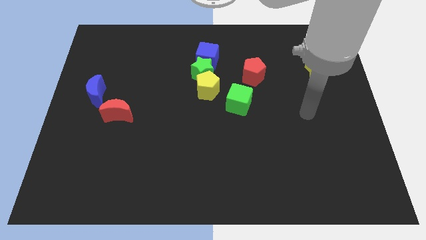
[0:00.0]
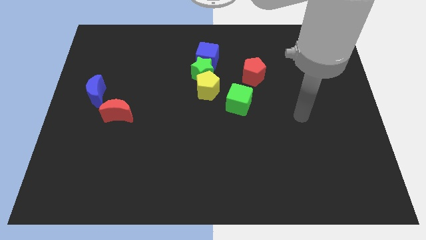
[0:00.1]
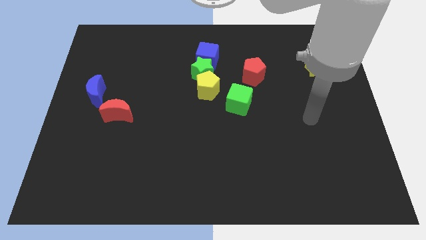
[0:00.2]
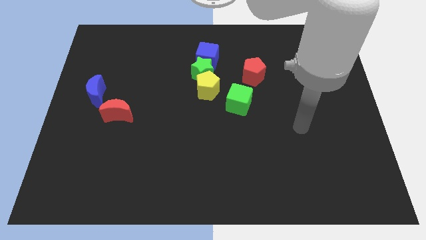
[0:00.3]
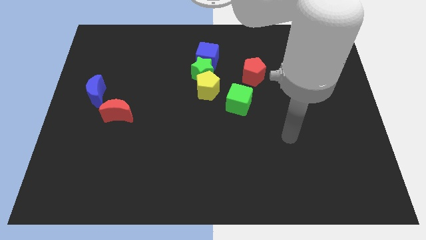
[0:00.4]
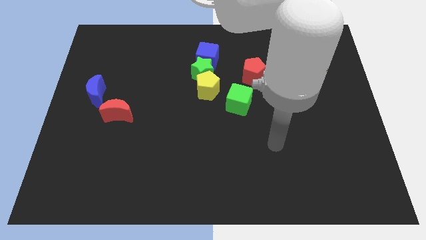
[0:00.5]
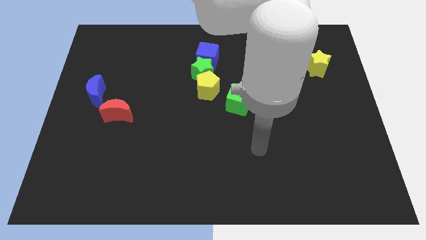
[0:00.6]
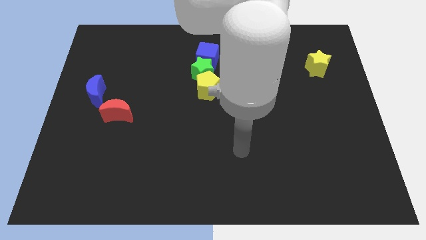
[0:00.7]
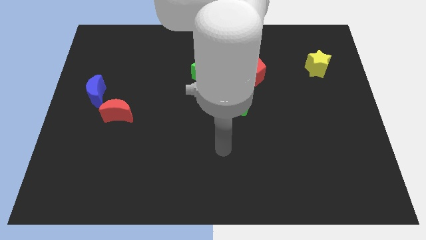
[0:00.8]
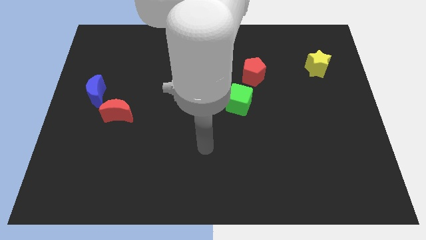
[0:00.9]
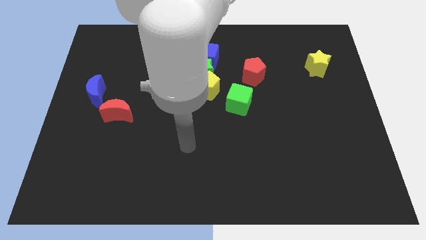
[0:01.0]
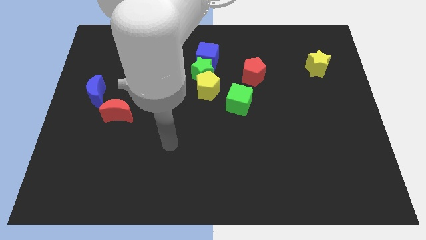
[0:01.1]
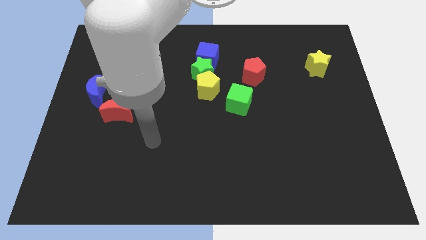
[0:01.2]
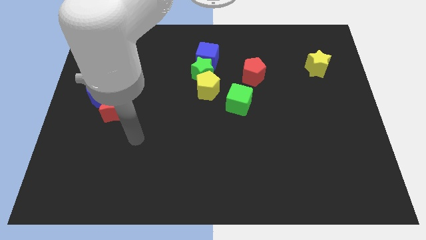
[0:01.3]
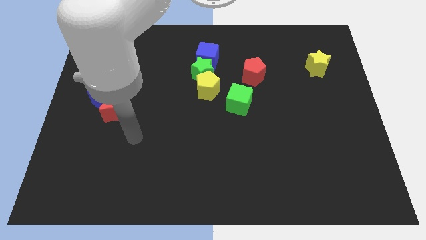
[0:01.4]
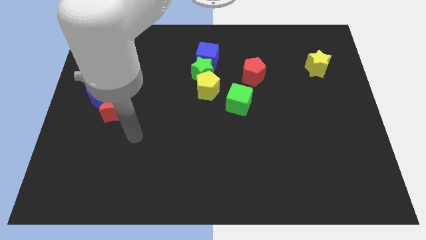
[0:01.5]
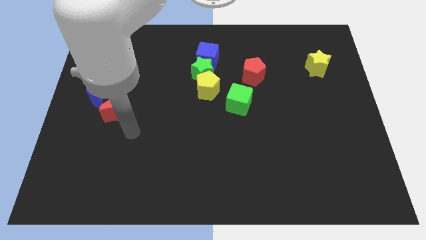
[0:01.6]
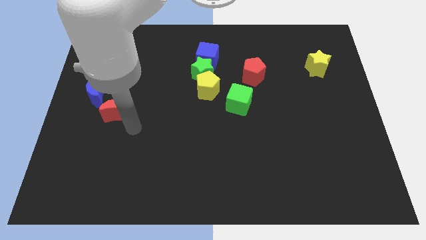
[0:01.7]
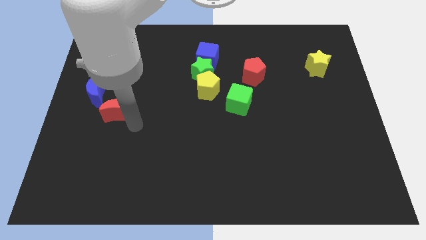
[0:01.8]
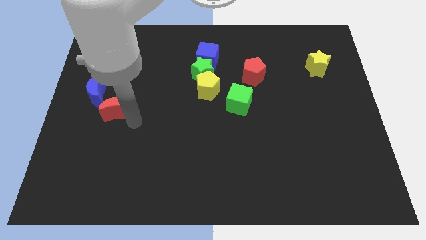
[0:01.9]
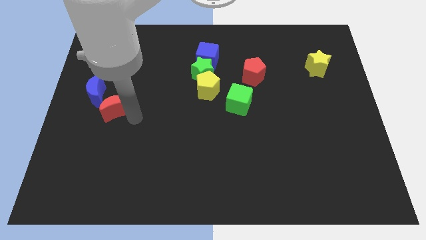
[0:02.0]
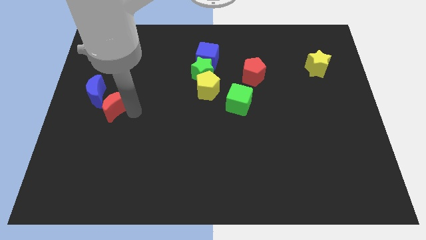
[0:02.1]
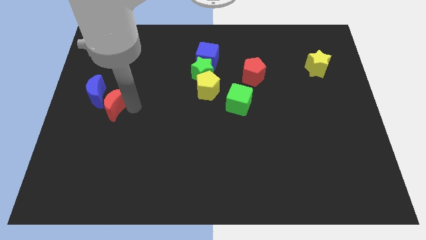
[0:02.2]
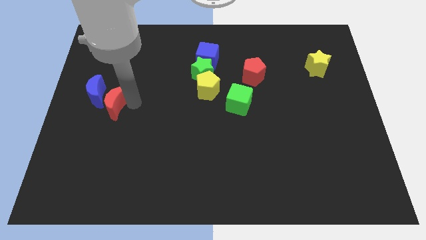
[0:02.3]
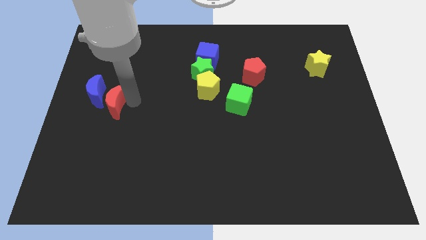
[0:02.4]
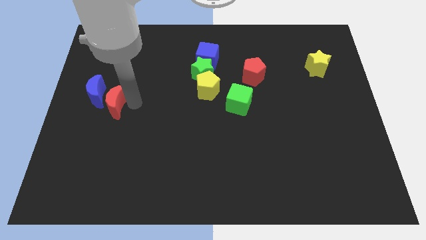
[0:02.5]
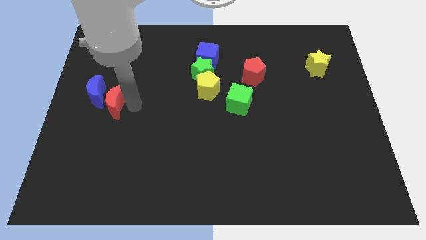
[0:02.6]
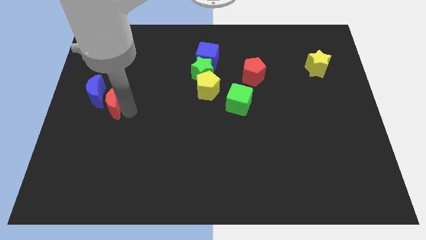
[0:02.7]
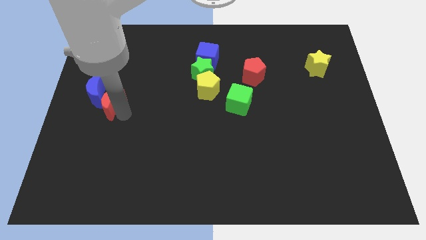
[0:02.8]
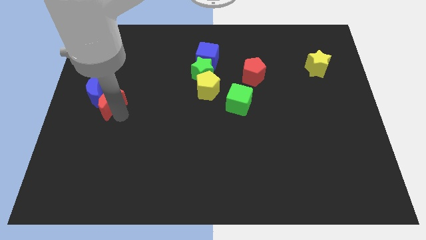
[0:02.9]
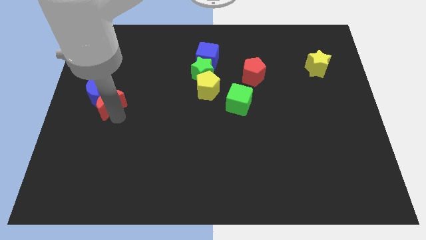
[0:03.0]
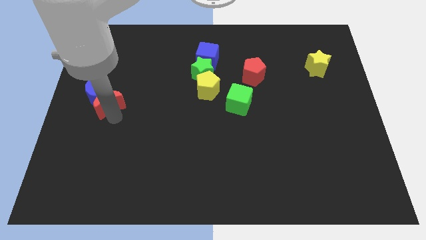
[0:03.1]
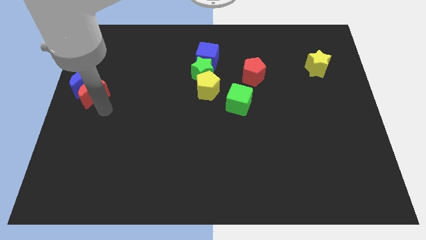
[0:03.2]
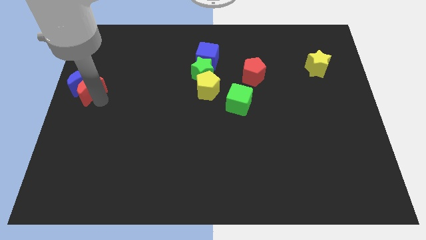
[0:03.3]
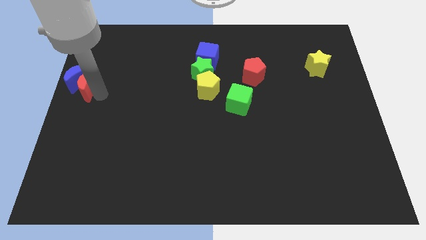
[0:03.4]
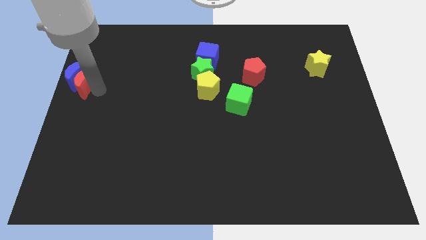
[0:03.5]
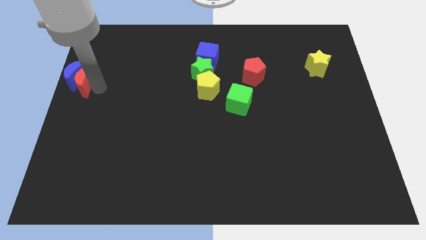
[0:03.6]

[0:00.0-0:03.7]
push the red moon into the blue moon

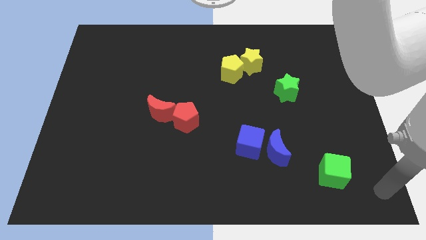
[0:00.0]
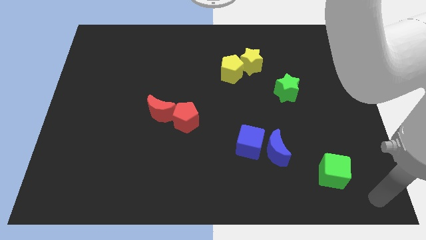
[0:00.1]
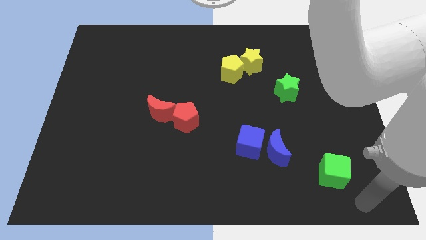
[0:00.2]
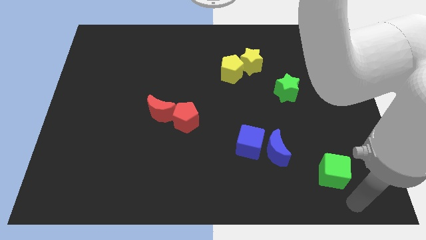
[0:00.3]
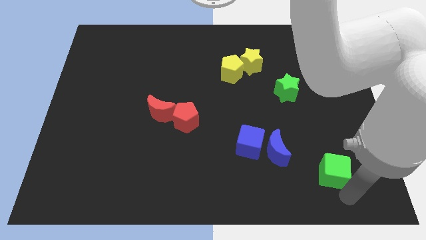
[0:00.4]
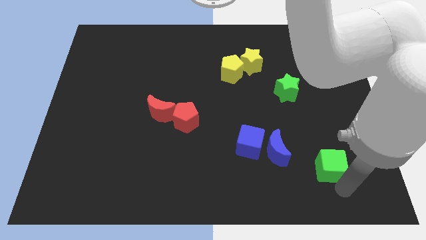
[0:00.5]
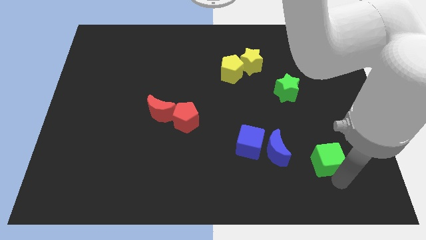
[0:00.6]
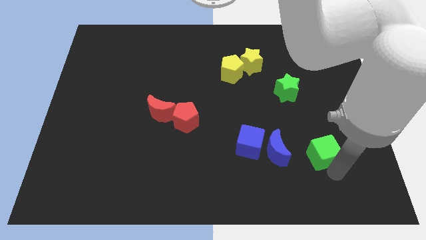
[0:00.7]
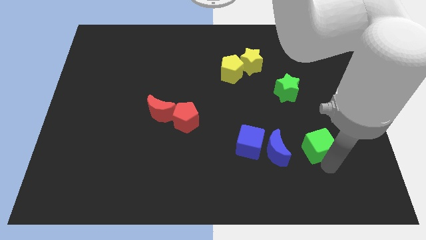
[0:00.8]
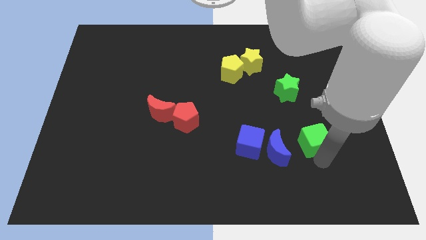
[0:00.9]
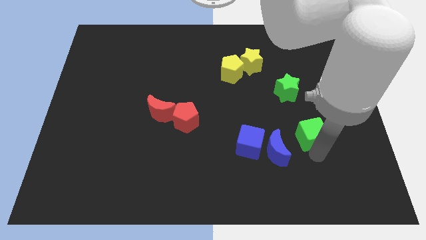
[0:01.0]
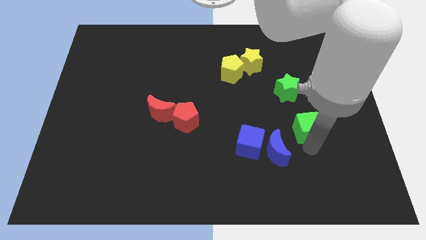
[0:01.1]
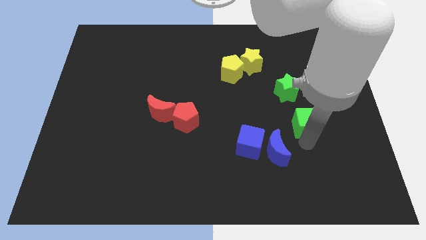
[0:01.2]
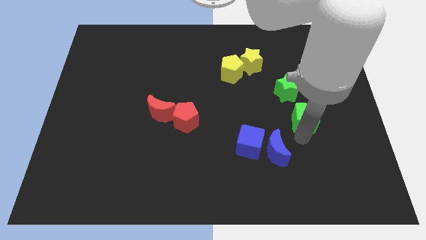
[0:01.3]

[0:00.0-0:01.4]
push the green cube bottom to the green star

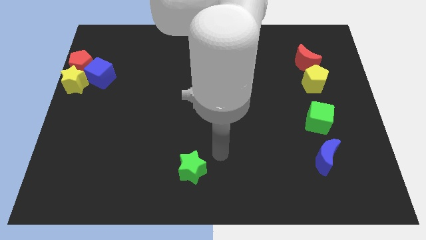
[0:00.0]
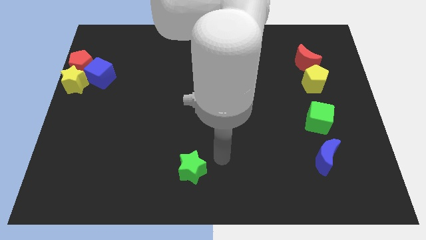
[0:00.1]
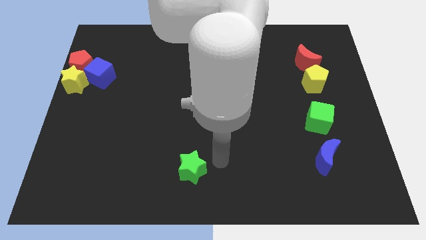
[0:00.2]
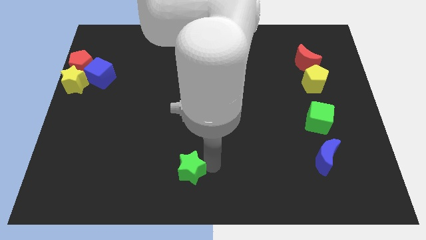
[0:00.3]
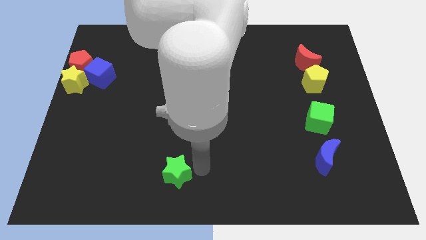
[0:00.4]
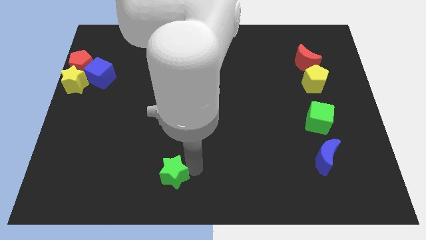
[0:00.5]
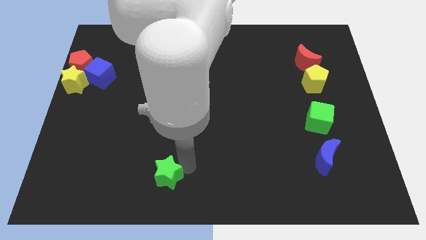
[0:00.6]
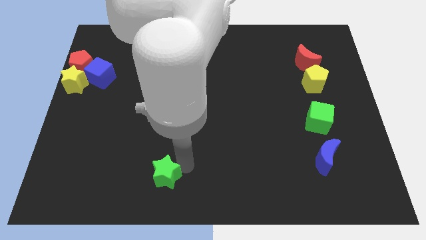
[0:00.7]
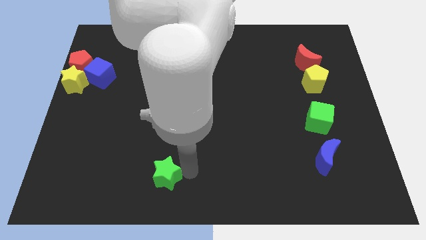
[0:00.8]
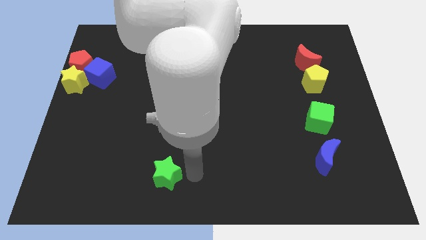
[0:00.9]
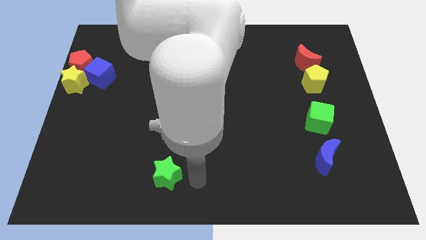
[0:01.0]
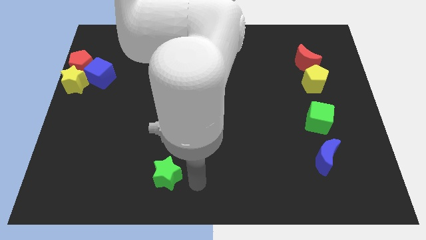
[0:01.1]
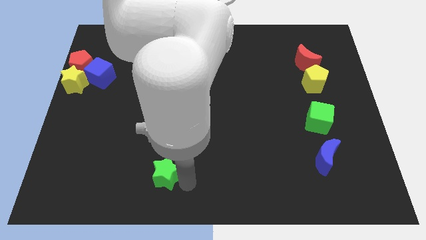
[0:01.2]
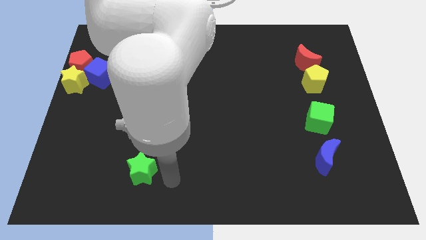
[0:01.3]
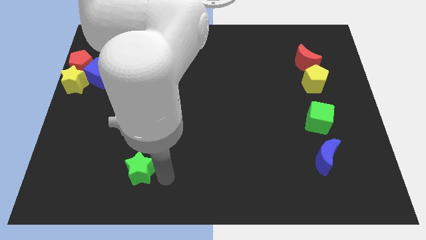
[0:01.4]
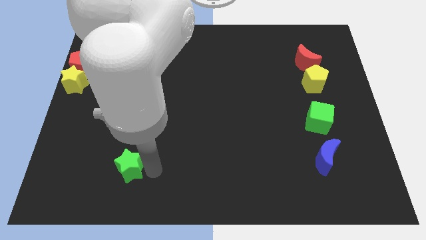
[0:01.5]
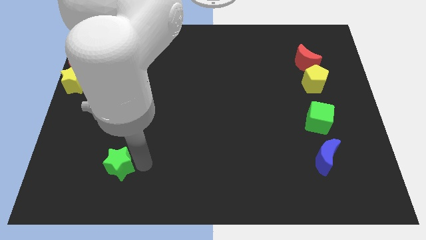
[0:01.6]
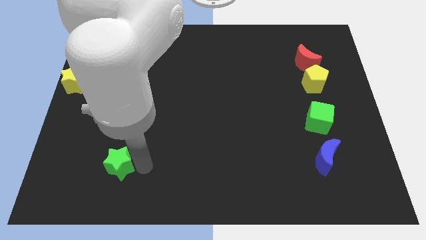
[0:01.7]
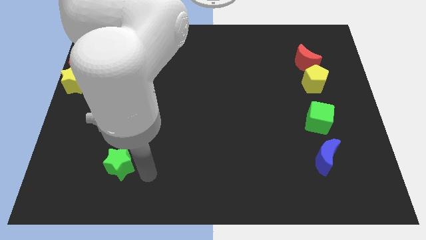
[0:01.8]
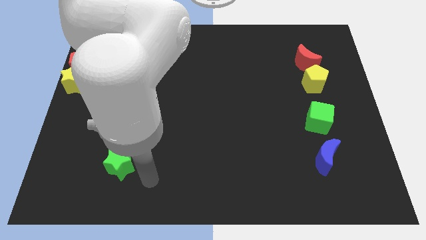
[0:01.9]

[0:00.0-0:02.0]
place the green star diagonal to the yellow star

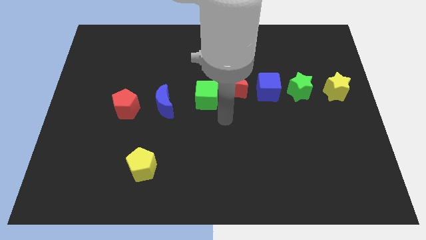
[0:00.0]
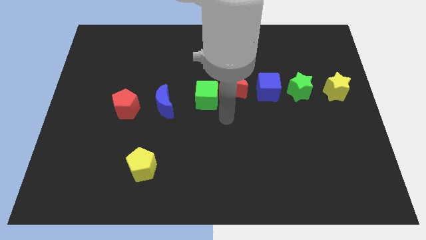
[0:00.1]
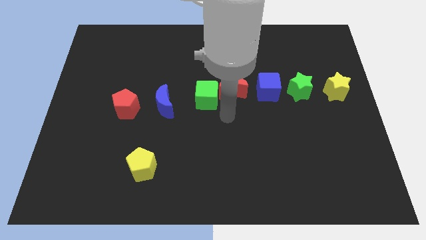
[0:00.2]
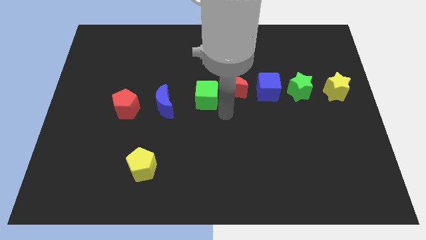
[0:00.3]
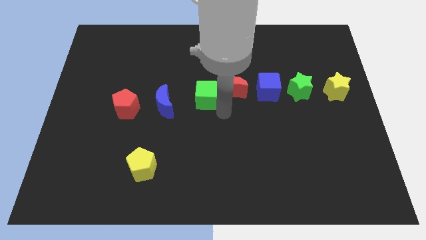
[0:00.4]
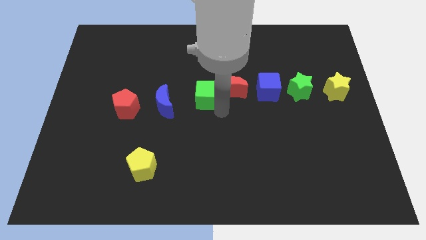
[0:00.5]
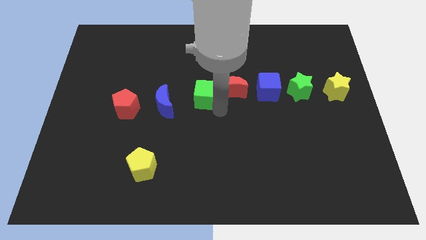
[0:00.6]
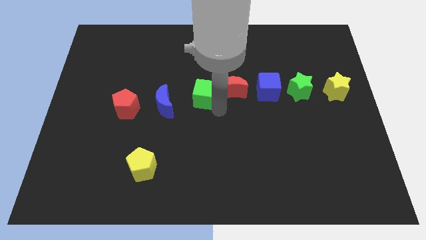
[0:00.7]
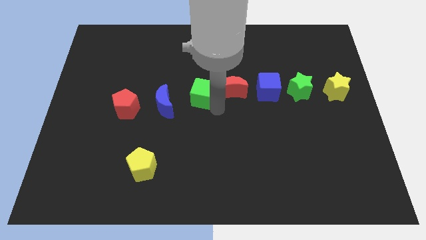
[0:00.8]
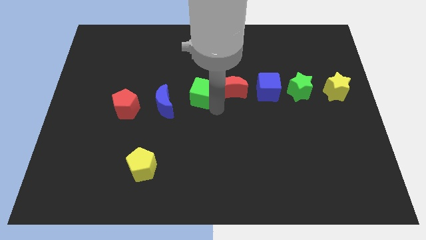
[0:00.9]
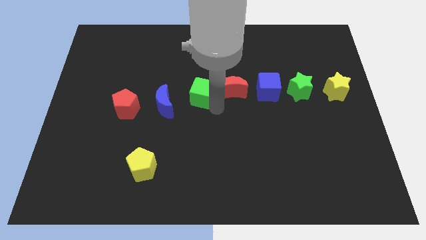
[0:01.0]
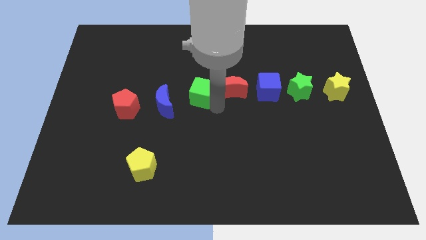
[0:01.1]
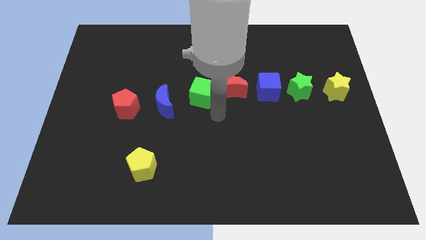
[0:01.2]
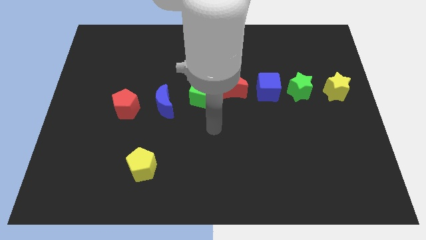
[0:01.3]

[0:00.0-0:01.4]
move green cube slightly at the center

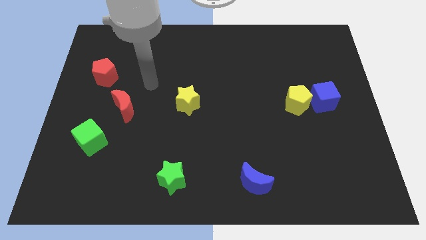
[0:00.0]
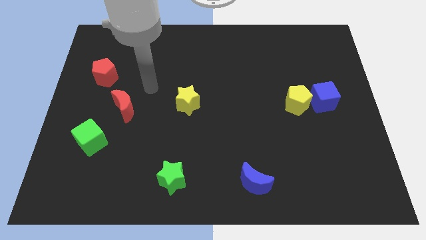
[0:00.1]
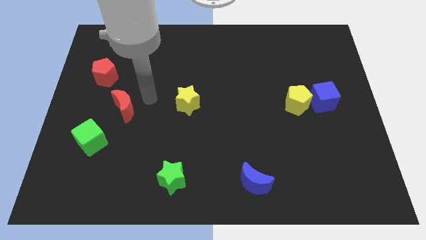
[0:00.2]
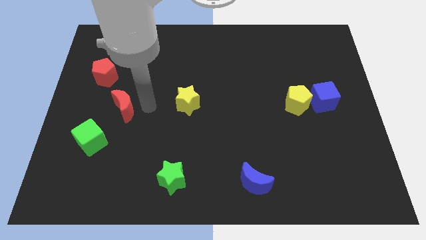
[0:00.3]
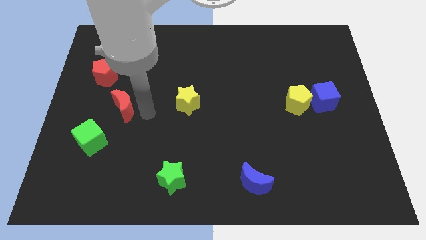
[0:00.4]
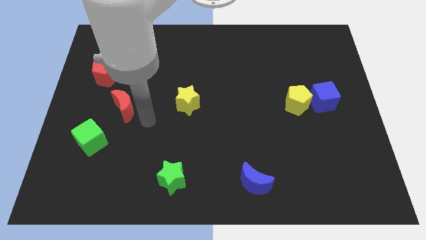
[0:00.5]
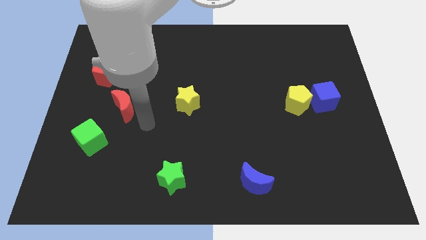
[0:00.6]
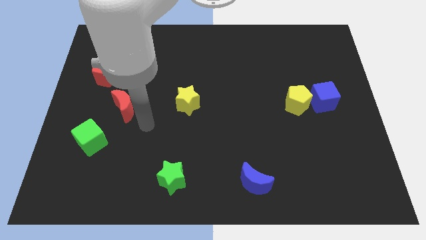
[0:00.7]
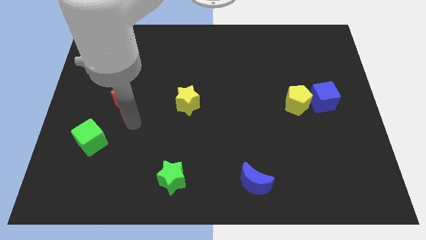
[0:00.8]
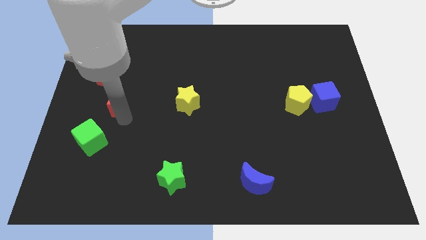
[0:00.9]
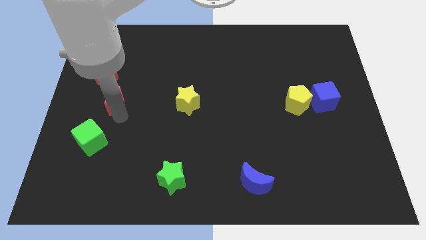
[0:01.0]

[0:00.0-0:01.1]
place your arm diagonally to the red moon
